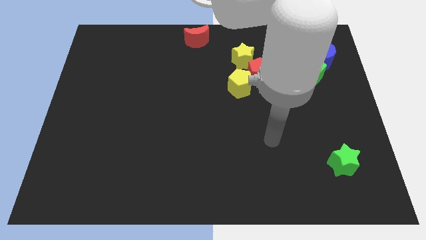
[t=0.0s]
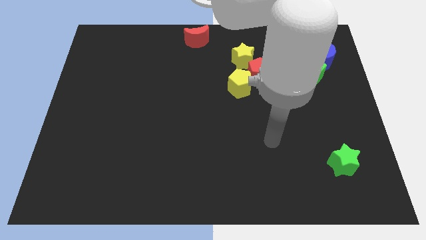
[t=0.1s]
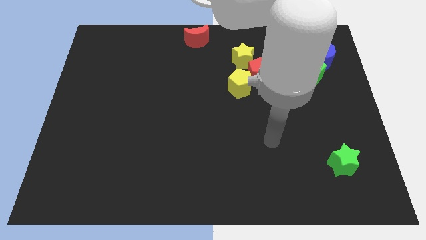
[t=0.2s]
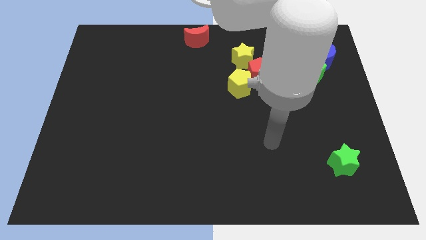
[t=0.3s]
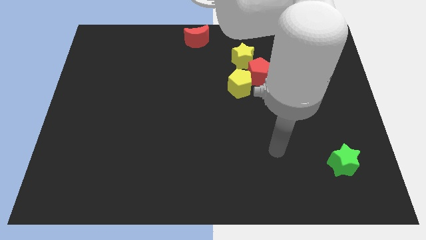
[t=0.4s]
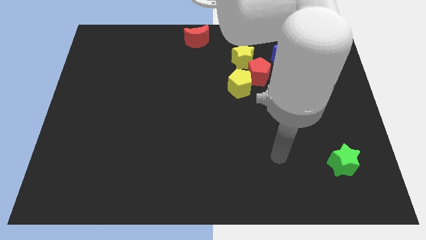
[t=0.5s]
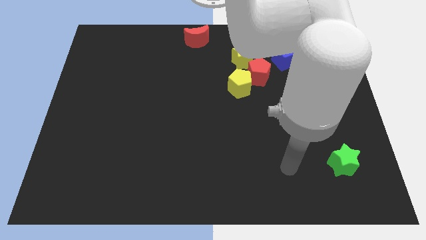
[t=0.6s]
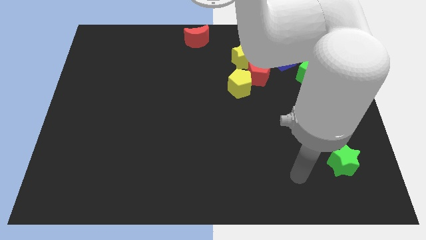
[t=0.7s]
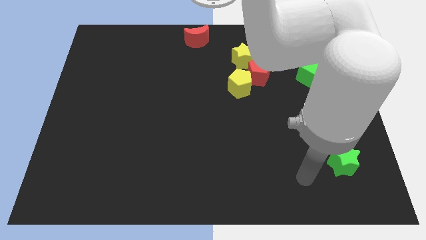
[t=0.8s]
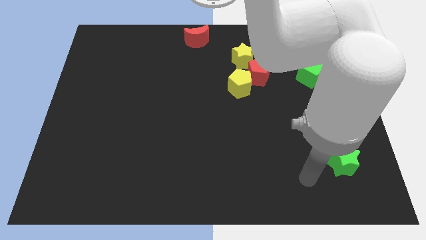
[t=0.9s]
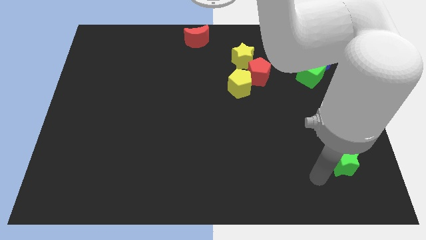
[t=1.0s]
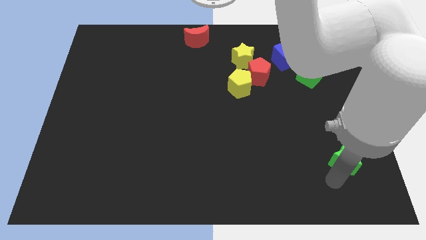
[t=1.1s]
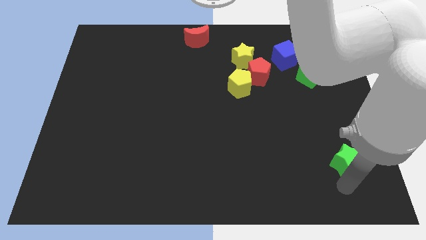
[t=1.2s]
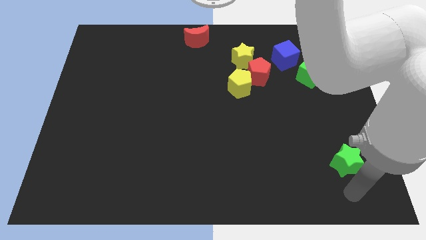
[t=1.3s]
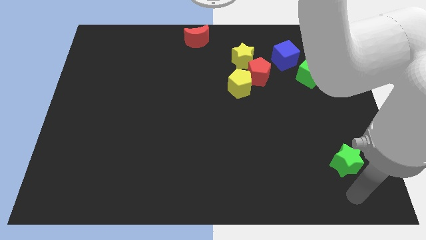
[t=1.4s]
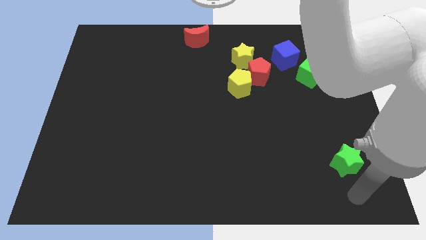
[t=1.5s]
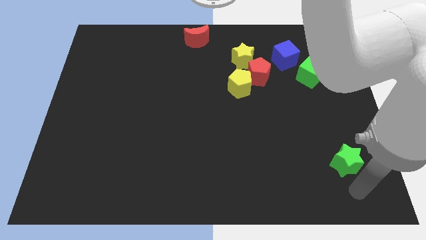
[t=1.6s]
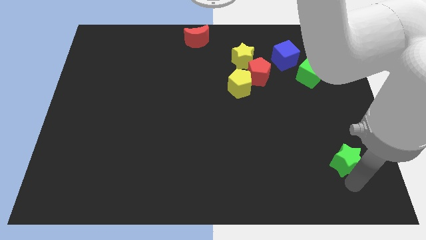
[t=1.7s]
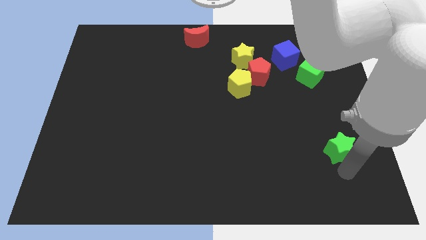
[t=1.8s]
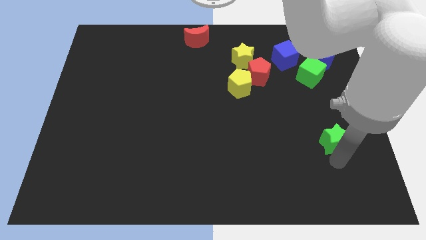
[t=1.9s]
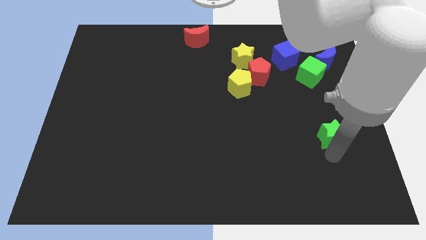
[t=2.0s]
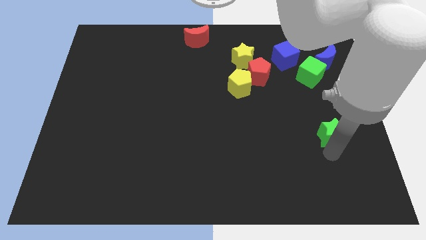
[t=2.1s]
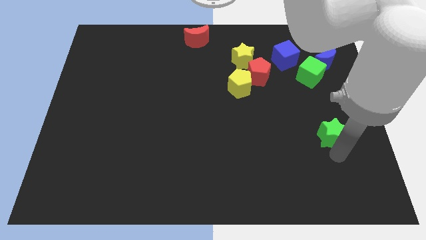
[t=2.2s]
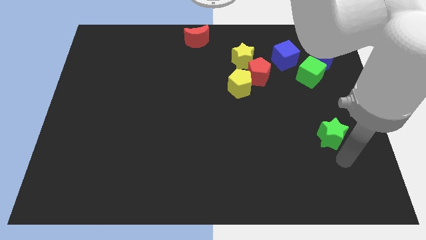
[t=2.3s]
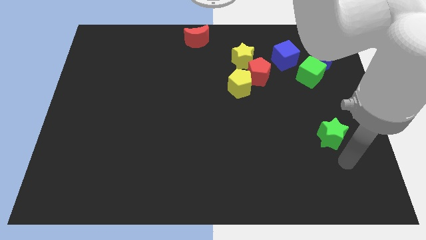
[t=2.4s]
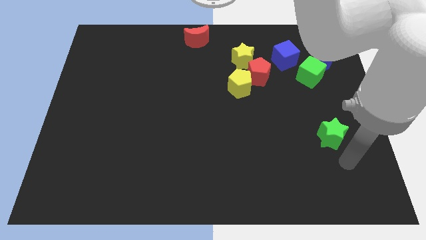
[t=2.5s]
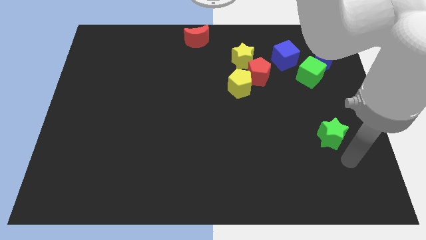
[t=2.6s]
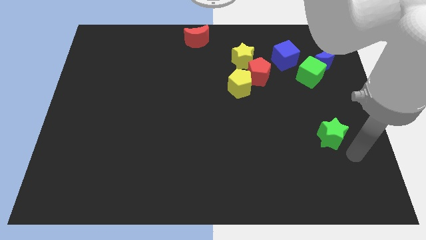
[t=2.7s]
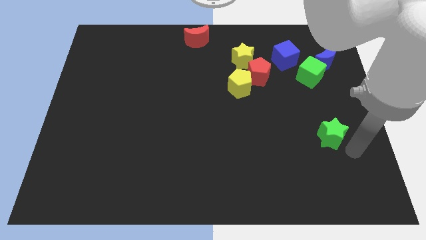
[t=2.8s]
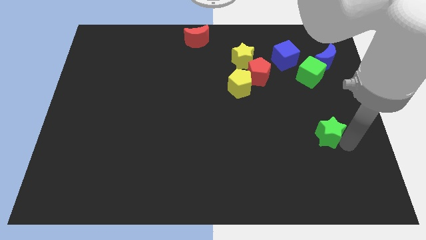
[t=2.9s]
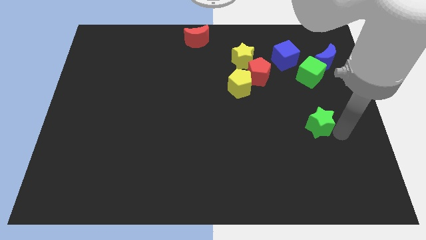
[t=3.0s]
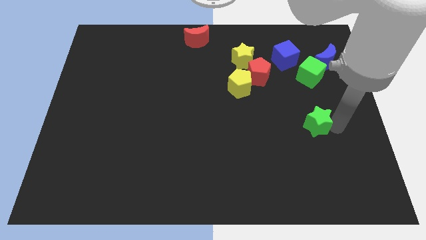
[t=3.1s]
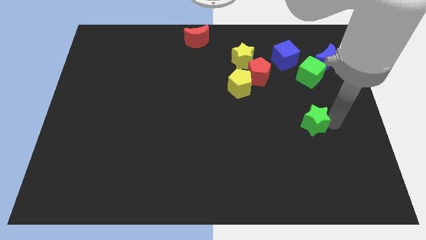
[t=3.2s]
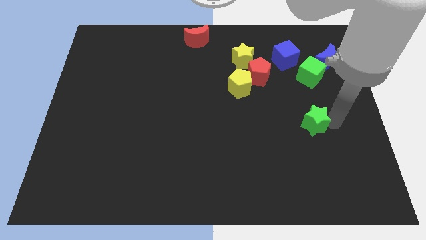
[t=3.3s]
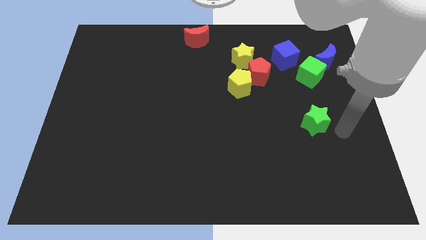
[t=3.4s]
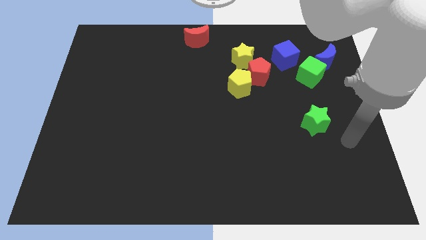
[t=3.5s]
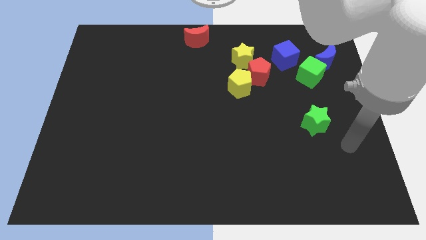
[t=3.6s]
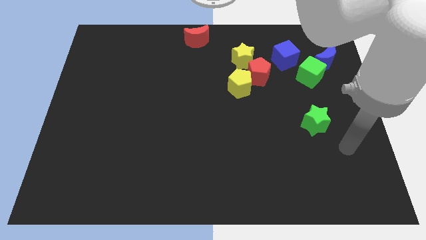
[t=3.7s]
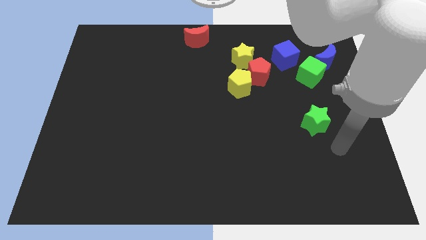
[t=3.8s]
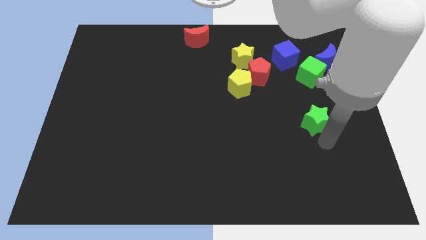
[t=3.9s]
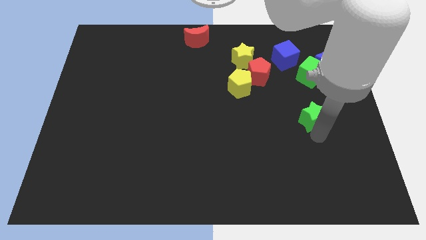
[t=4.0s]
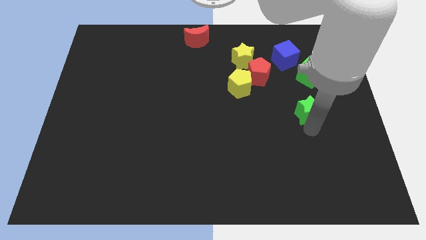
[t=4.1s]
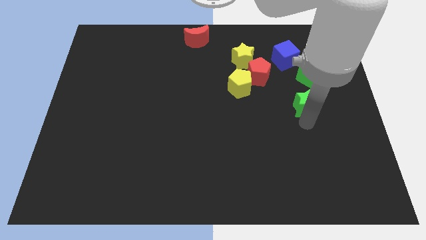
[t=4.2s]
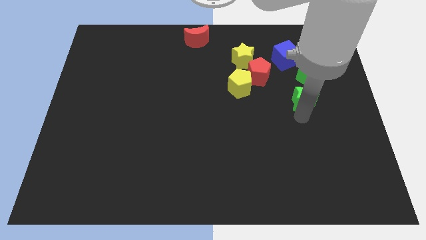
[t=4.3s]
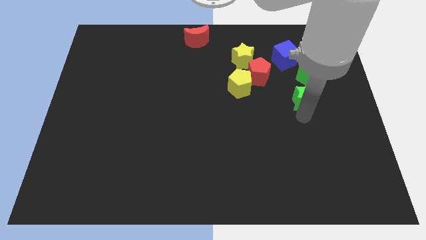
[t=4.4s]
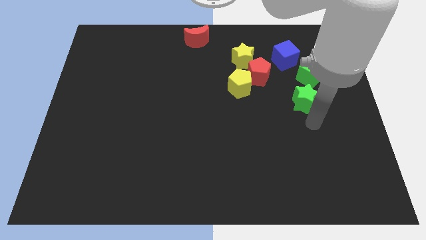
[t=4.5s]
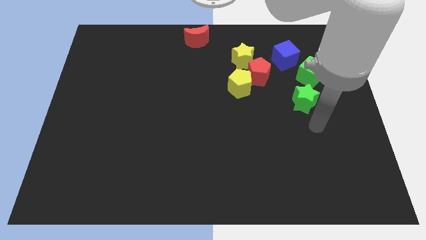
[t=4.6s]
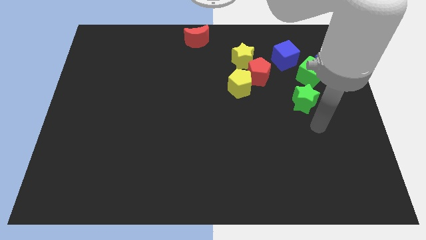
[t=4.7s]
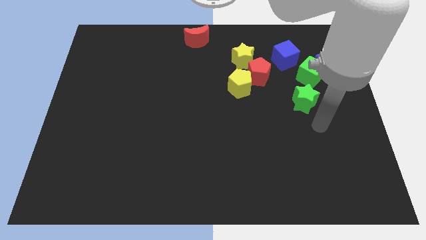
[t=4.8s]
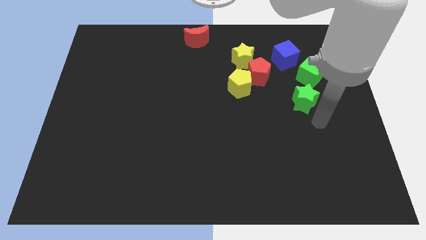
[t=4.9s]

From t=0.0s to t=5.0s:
move the green star close to green cube

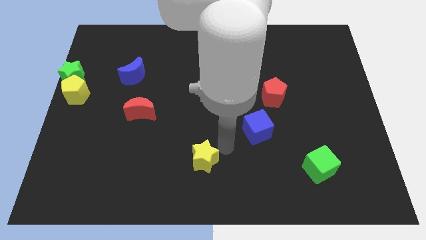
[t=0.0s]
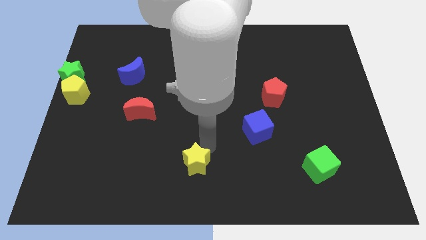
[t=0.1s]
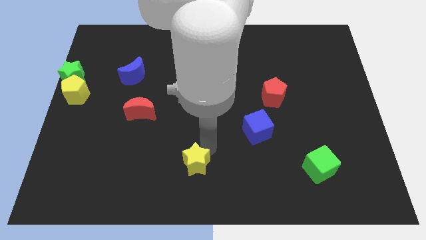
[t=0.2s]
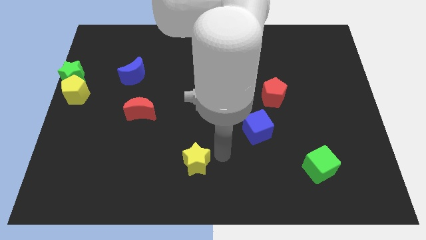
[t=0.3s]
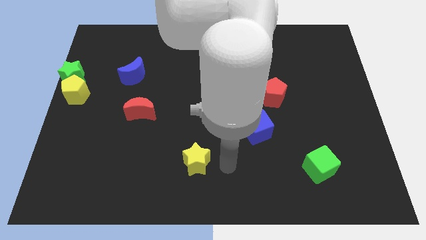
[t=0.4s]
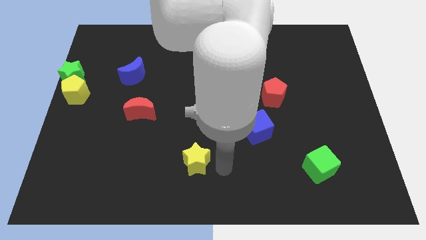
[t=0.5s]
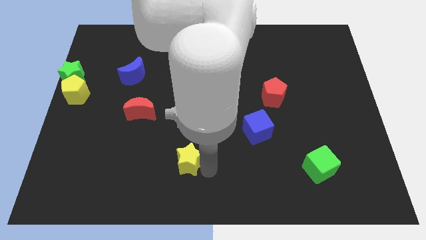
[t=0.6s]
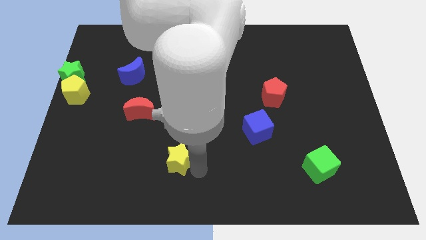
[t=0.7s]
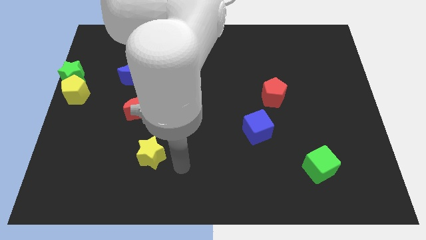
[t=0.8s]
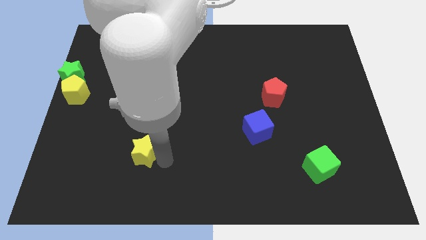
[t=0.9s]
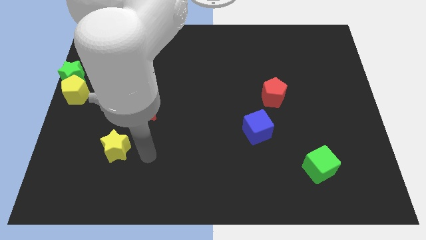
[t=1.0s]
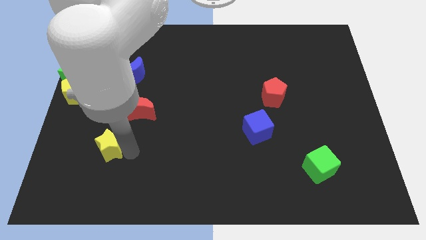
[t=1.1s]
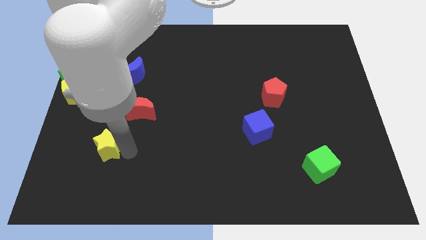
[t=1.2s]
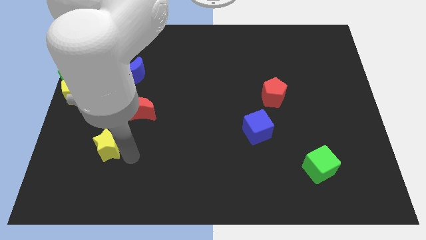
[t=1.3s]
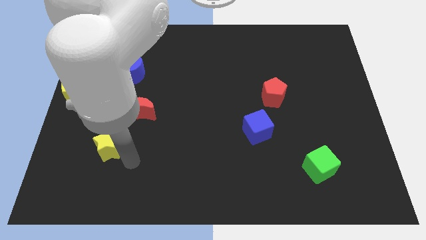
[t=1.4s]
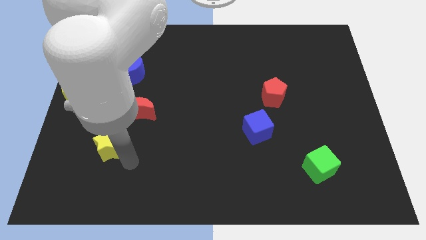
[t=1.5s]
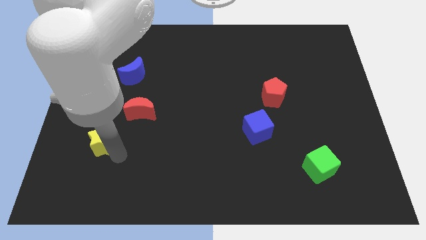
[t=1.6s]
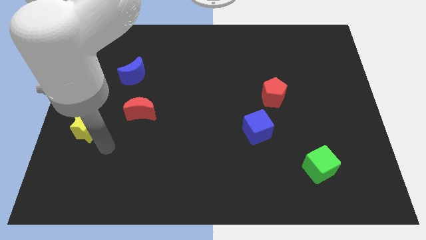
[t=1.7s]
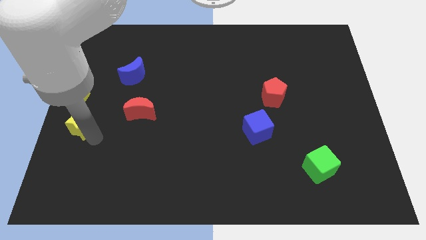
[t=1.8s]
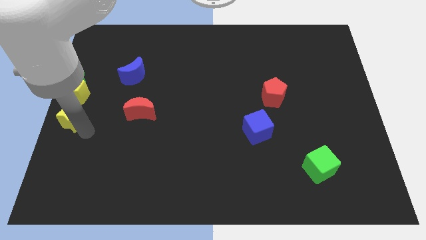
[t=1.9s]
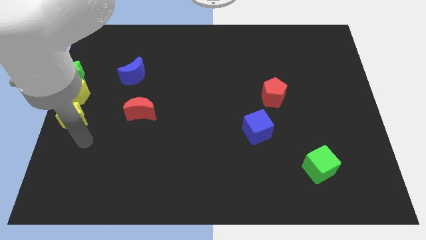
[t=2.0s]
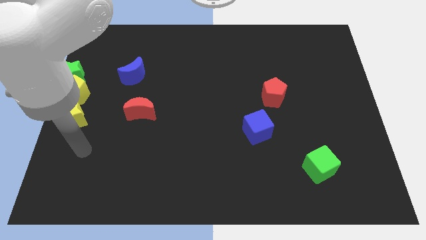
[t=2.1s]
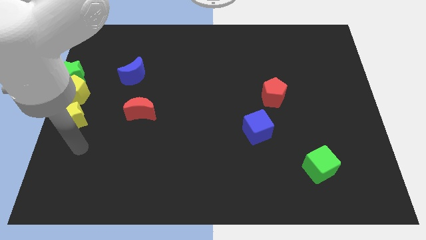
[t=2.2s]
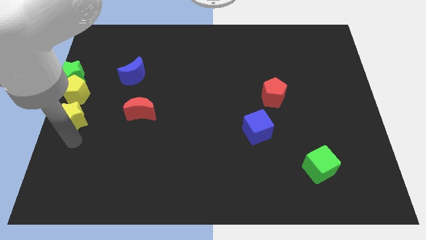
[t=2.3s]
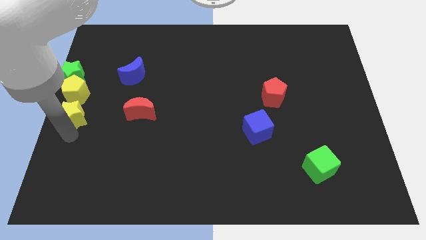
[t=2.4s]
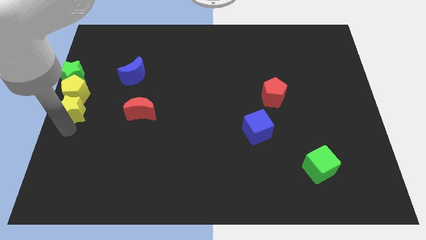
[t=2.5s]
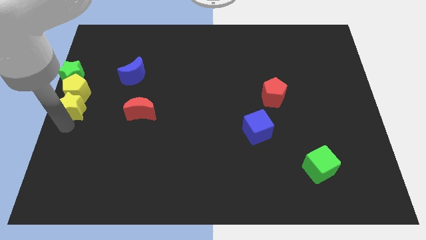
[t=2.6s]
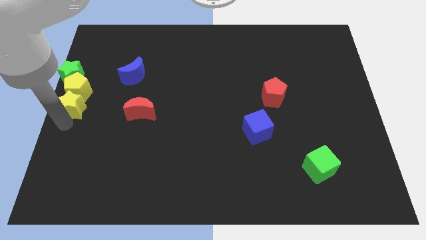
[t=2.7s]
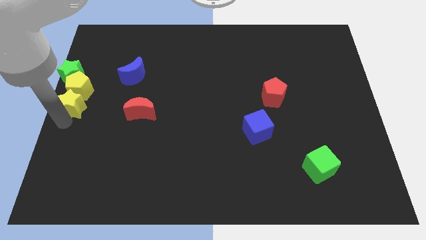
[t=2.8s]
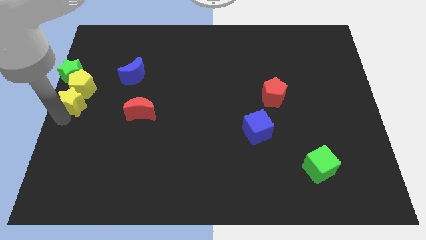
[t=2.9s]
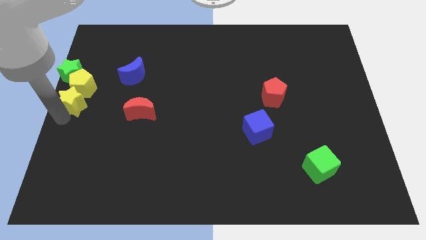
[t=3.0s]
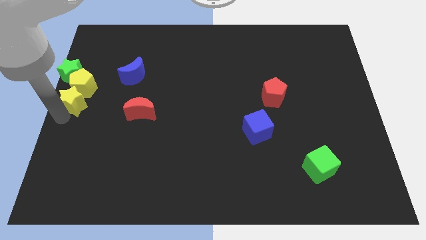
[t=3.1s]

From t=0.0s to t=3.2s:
move yellow star below the yellow pentagon

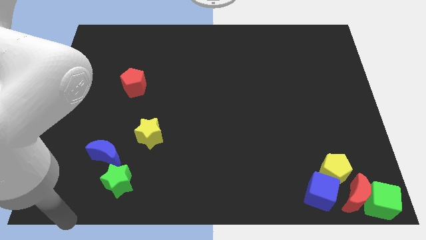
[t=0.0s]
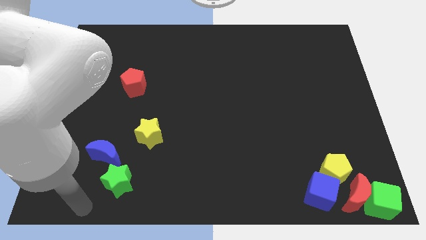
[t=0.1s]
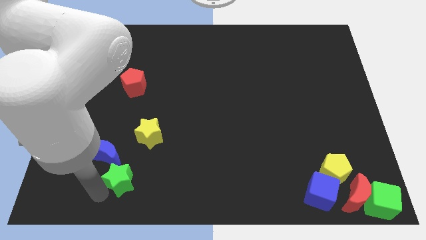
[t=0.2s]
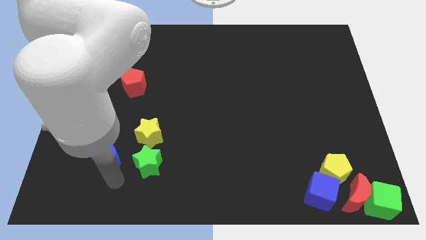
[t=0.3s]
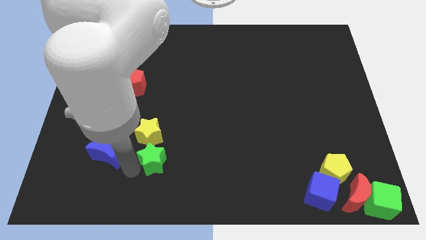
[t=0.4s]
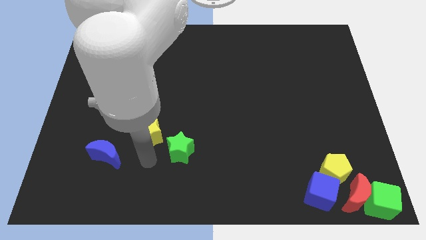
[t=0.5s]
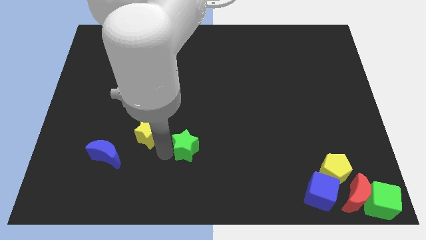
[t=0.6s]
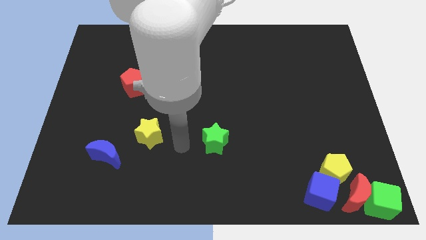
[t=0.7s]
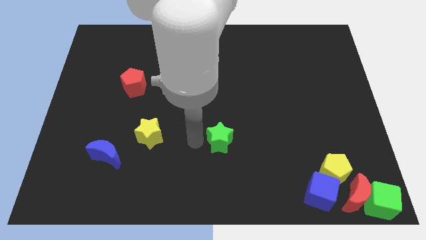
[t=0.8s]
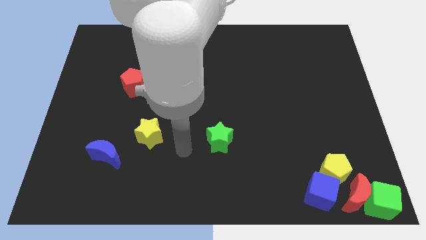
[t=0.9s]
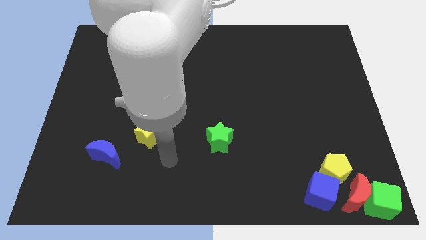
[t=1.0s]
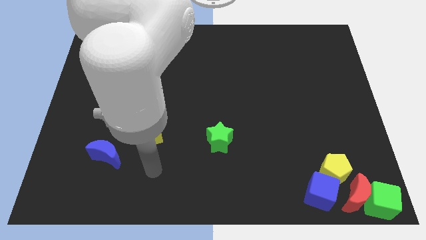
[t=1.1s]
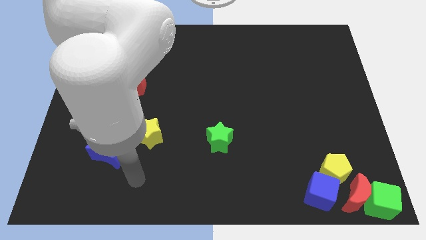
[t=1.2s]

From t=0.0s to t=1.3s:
put the green star horizontally right to the yellow star
